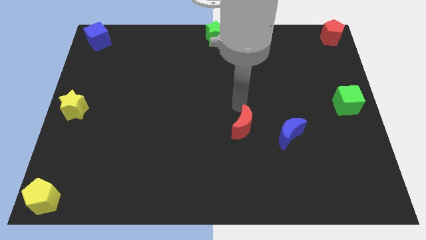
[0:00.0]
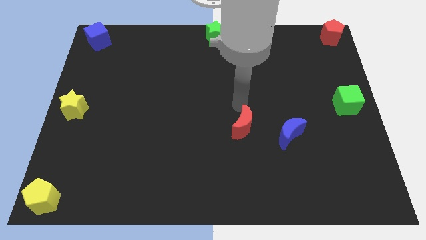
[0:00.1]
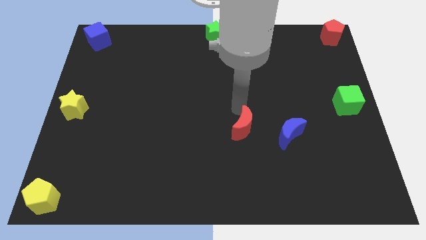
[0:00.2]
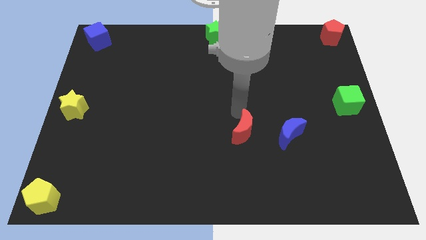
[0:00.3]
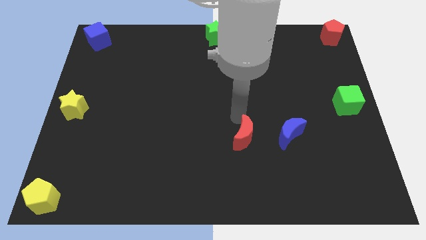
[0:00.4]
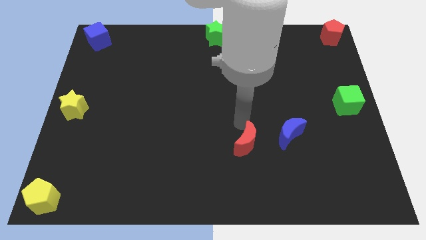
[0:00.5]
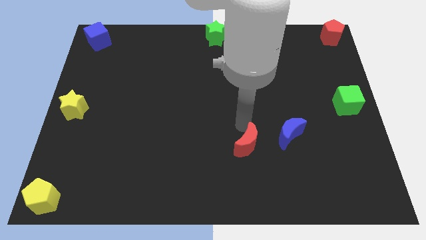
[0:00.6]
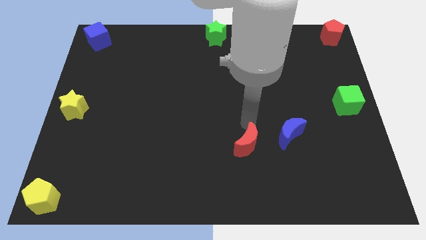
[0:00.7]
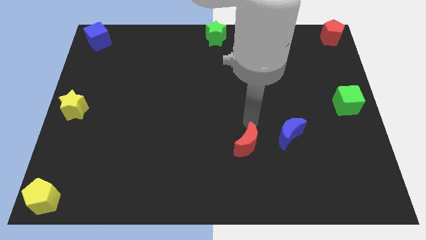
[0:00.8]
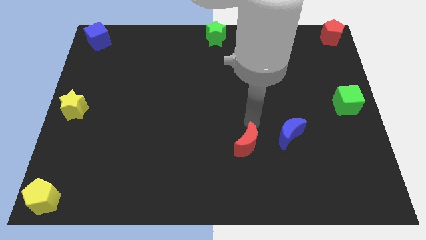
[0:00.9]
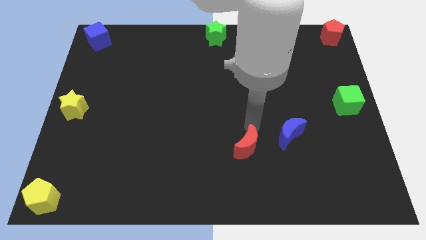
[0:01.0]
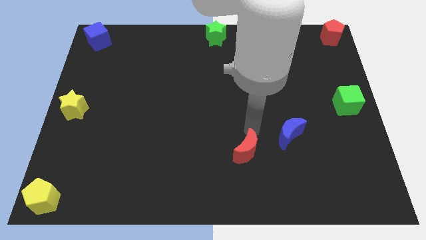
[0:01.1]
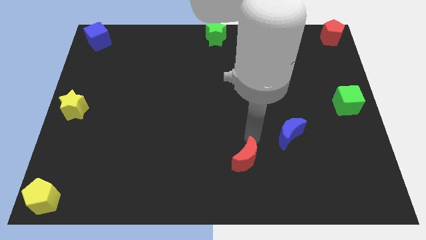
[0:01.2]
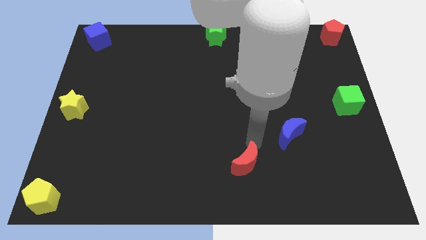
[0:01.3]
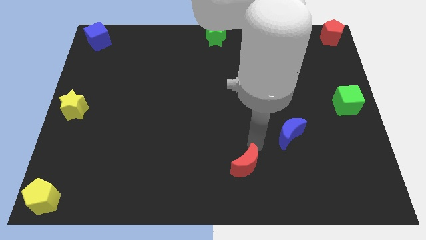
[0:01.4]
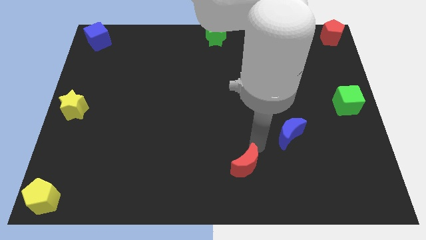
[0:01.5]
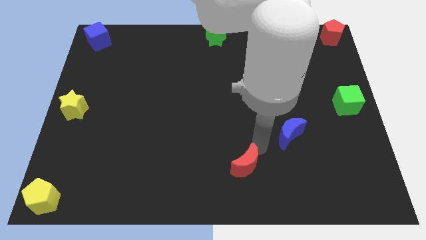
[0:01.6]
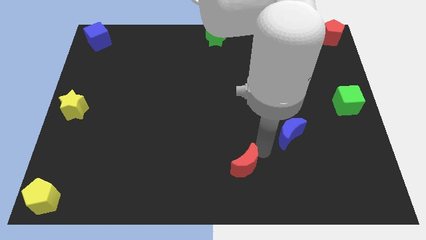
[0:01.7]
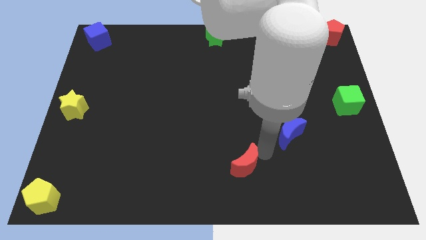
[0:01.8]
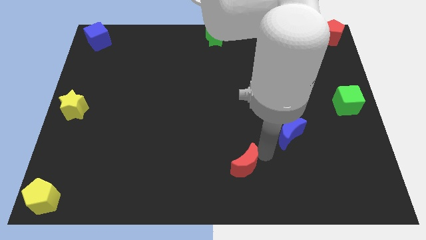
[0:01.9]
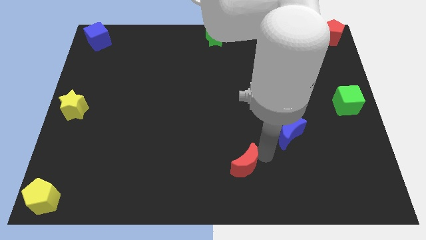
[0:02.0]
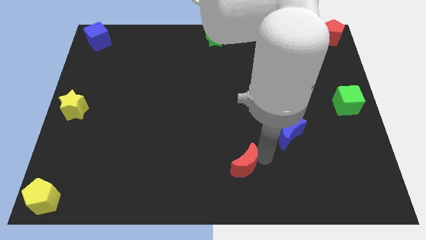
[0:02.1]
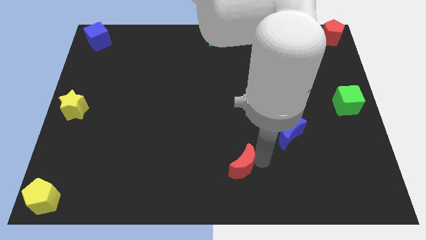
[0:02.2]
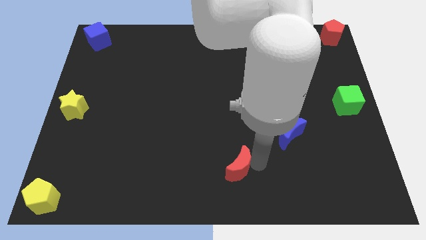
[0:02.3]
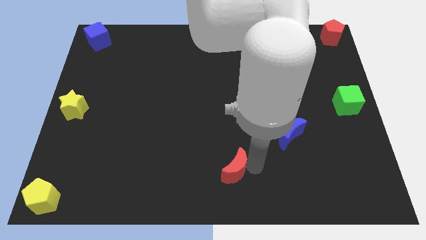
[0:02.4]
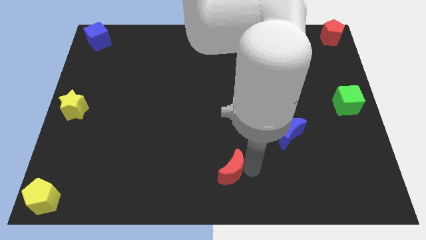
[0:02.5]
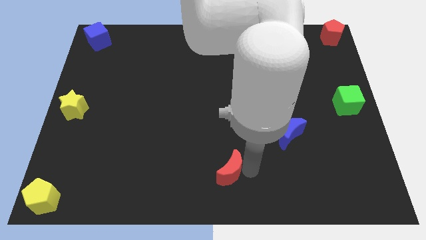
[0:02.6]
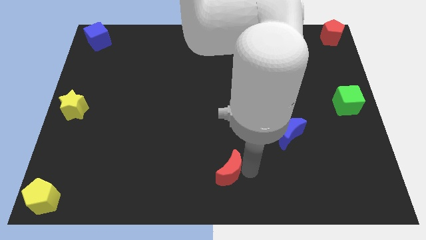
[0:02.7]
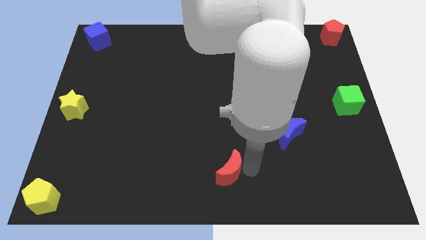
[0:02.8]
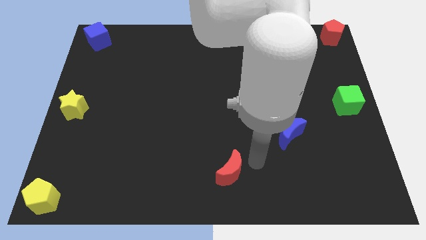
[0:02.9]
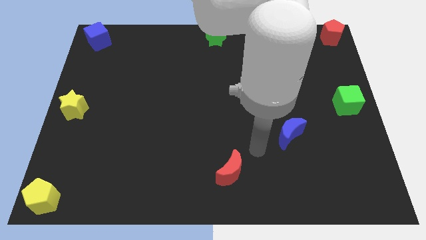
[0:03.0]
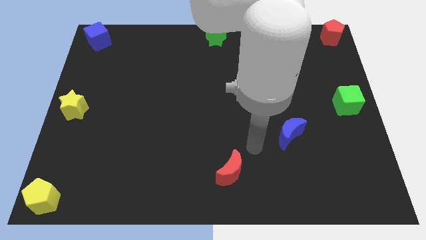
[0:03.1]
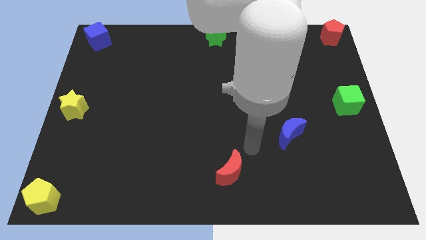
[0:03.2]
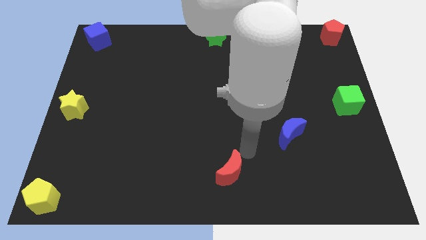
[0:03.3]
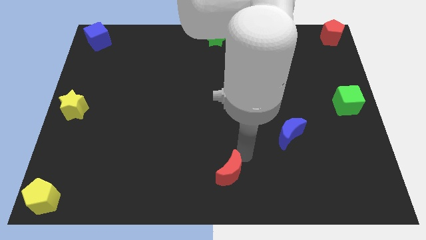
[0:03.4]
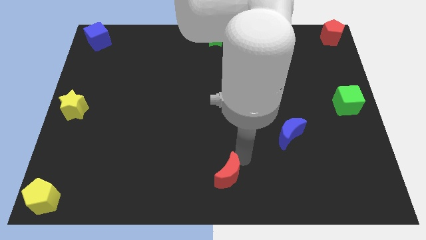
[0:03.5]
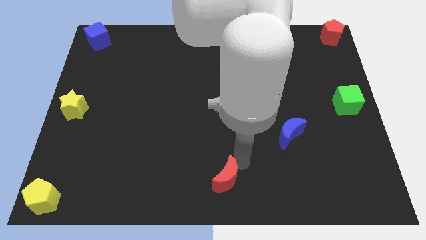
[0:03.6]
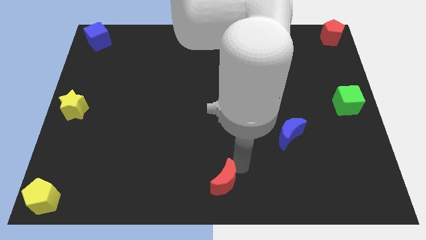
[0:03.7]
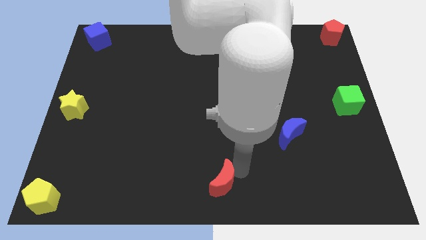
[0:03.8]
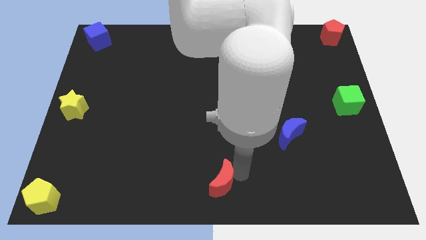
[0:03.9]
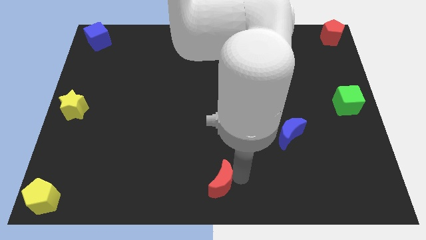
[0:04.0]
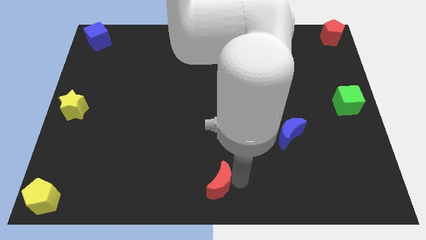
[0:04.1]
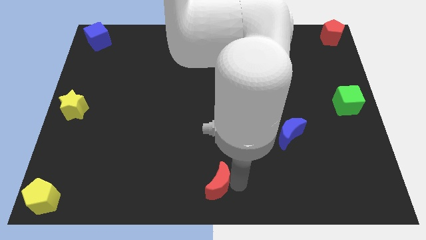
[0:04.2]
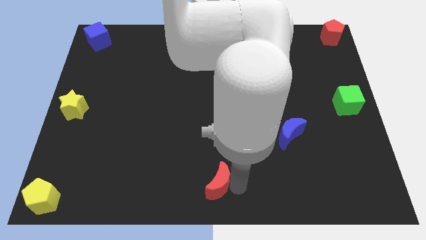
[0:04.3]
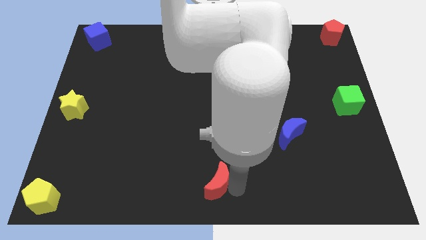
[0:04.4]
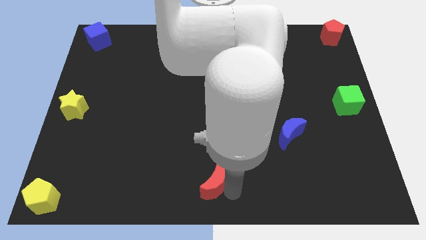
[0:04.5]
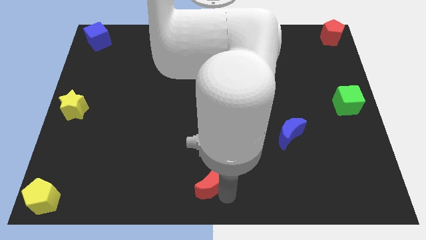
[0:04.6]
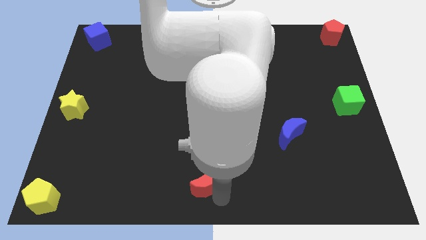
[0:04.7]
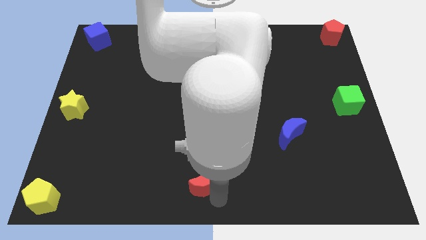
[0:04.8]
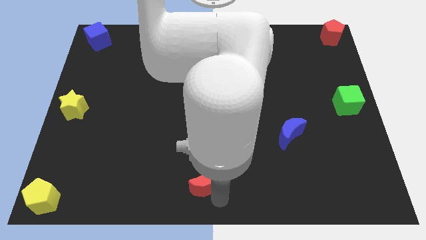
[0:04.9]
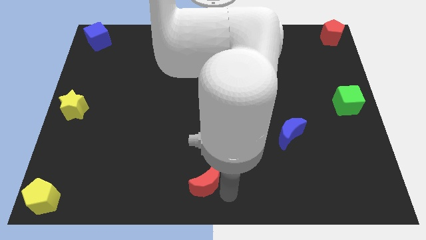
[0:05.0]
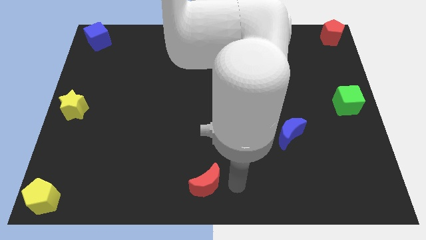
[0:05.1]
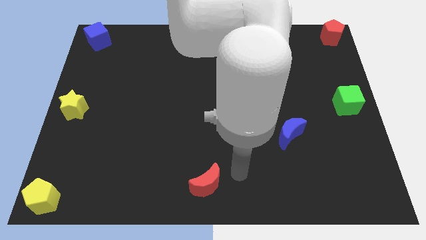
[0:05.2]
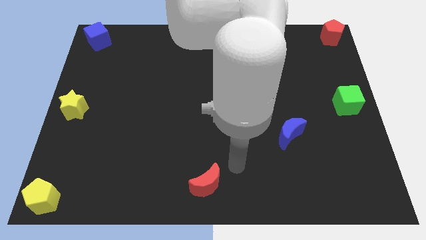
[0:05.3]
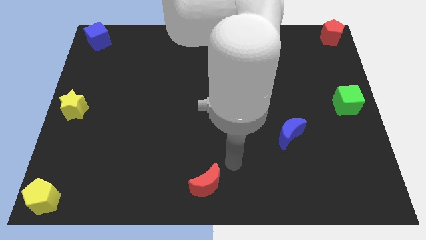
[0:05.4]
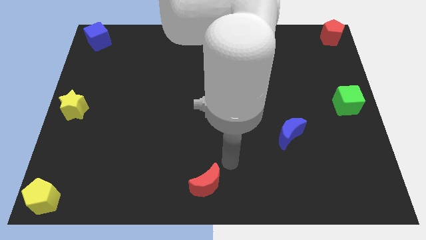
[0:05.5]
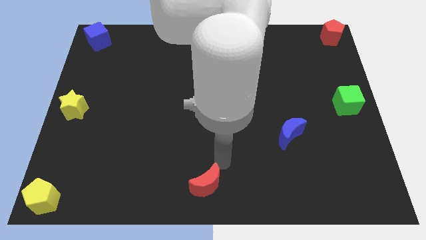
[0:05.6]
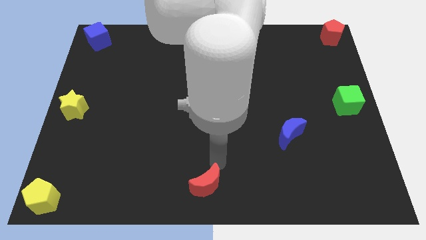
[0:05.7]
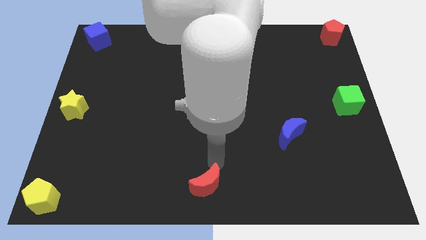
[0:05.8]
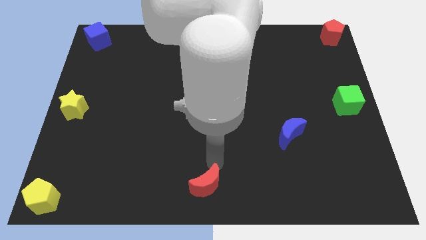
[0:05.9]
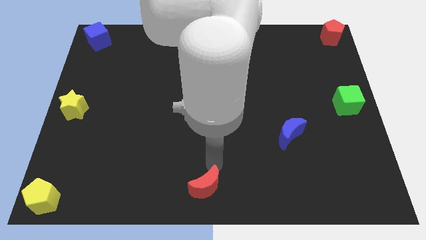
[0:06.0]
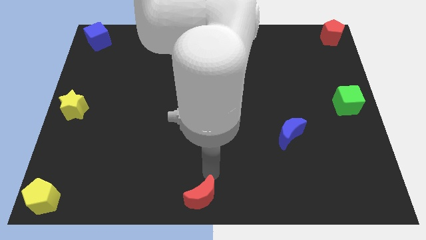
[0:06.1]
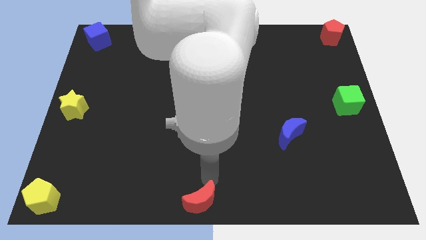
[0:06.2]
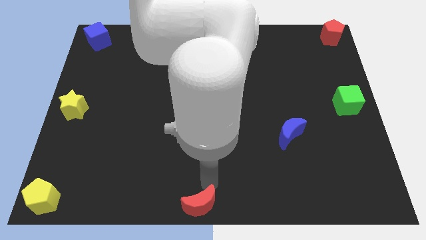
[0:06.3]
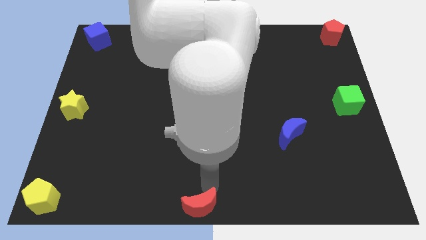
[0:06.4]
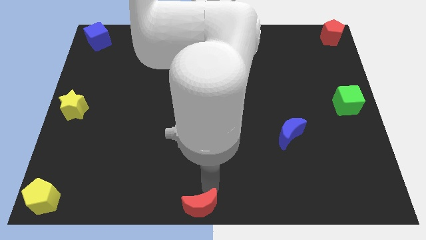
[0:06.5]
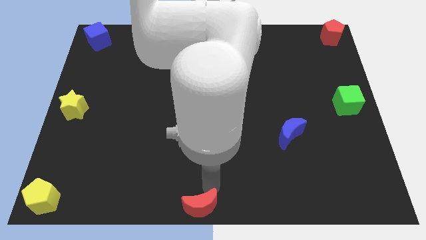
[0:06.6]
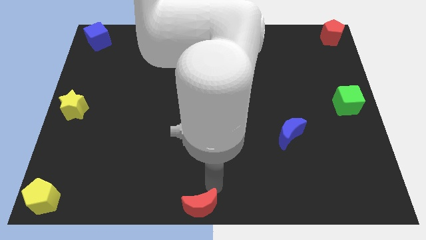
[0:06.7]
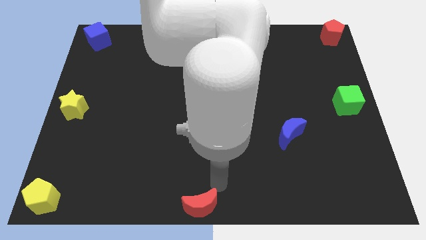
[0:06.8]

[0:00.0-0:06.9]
move the red crescent to the bottom center of the board

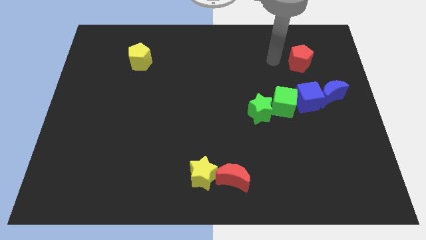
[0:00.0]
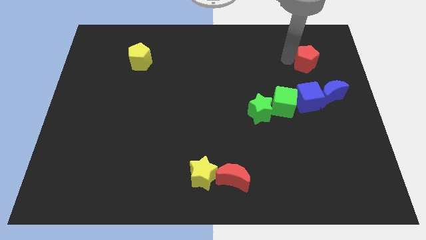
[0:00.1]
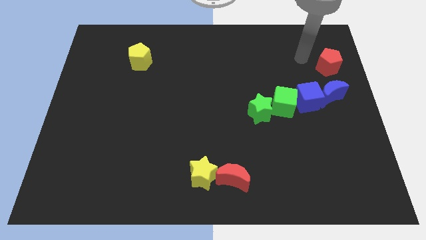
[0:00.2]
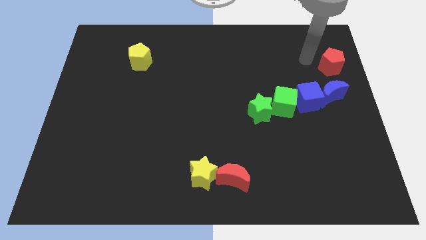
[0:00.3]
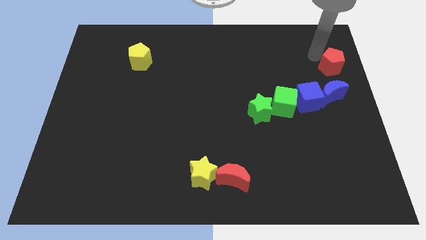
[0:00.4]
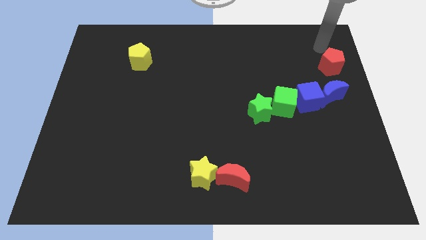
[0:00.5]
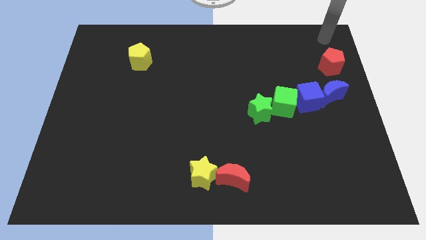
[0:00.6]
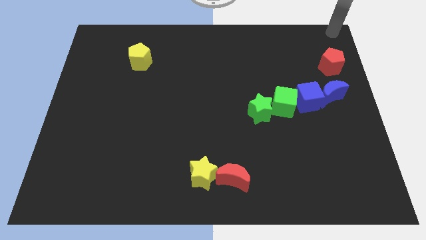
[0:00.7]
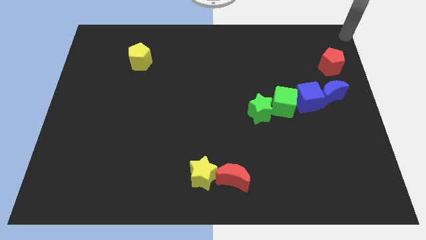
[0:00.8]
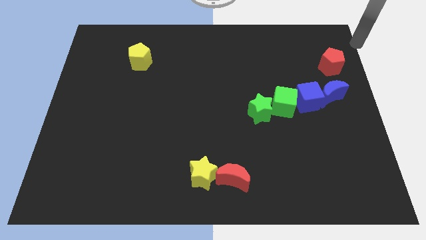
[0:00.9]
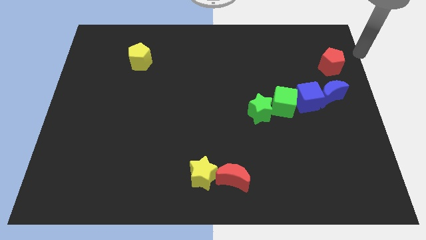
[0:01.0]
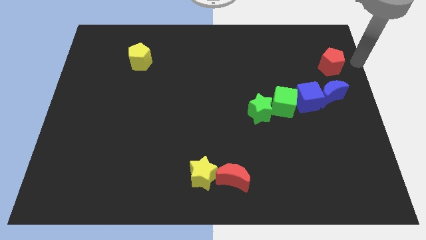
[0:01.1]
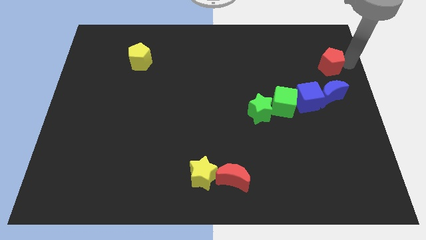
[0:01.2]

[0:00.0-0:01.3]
put the red pentagon above the blue moon

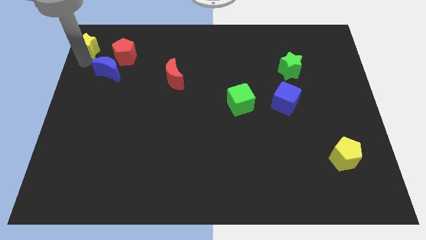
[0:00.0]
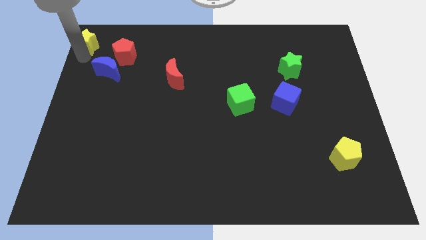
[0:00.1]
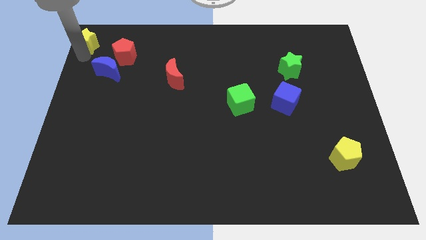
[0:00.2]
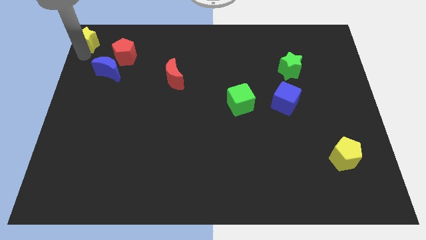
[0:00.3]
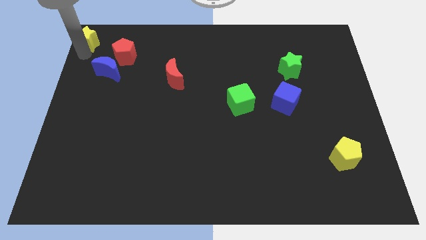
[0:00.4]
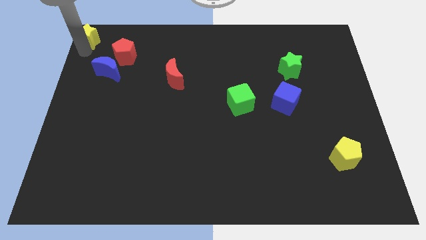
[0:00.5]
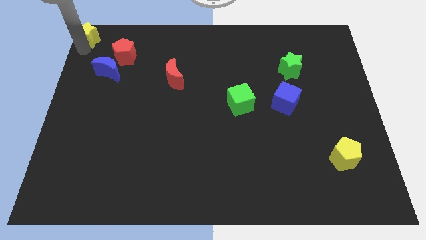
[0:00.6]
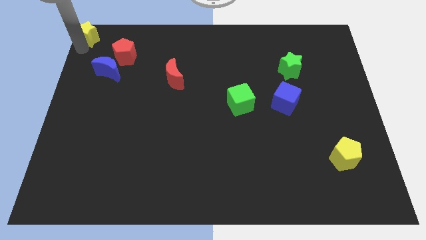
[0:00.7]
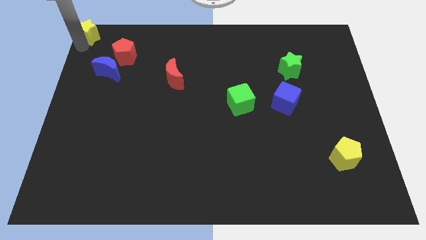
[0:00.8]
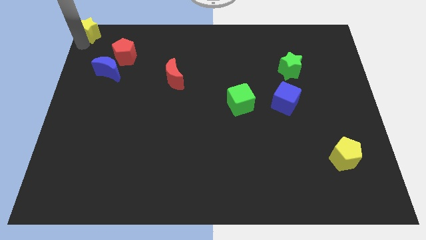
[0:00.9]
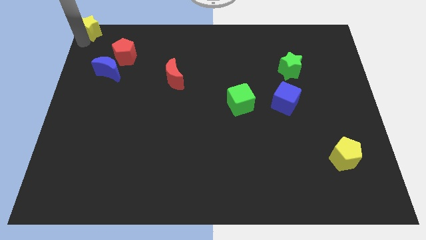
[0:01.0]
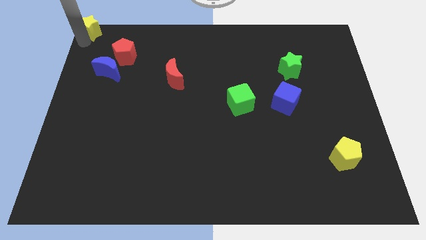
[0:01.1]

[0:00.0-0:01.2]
place the yellow star to the top left
